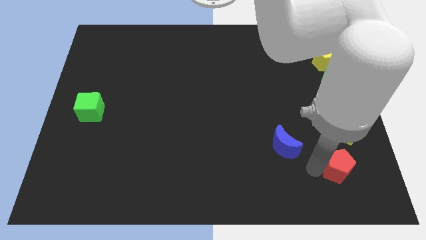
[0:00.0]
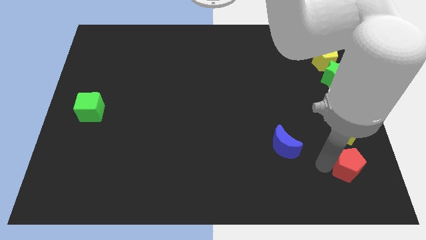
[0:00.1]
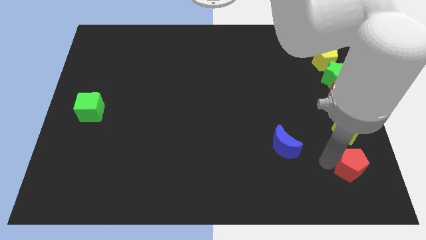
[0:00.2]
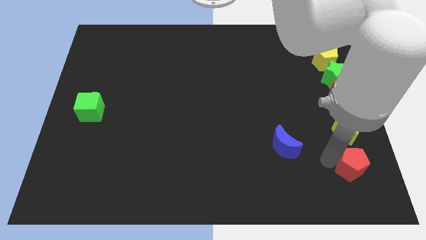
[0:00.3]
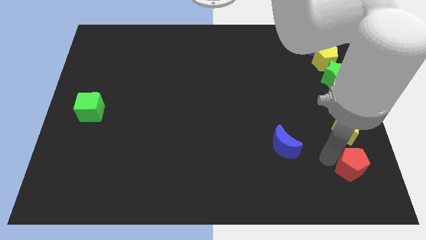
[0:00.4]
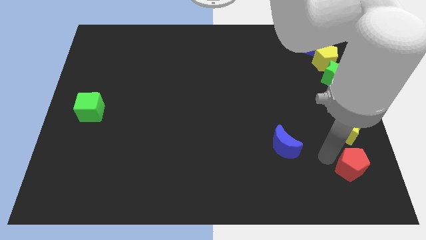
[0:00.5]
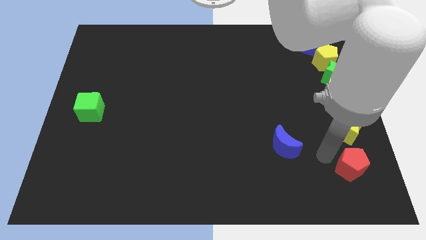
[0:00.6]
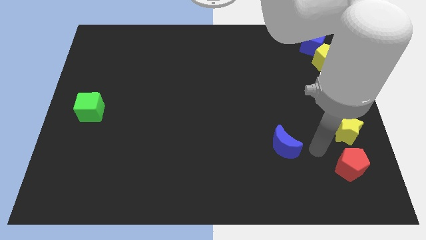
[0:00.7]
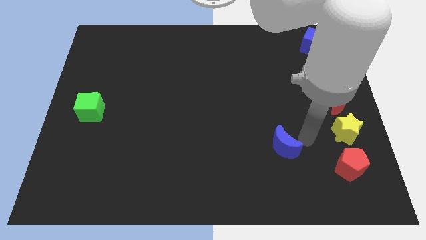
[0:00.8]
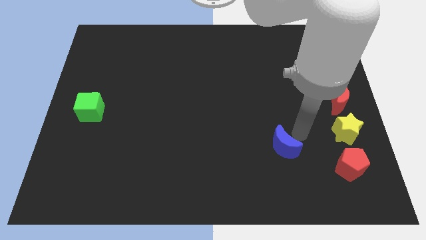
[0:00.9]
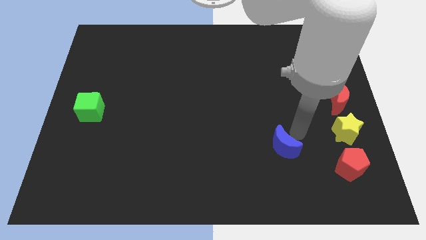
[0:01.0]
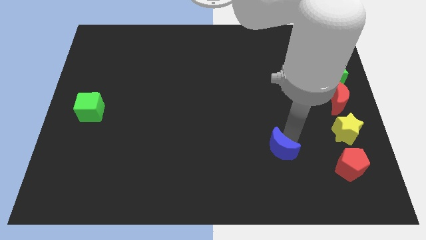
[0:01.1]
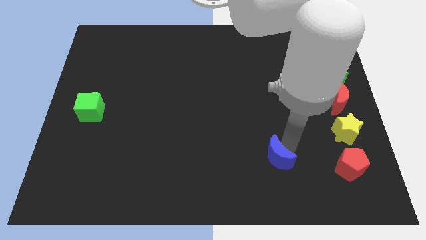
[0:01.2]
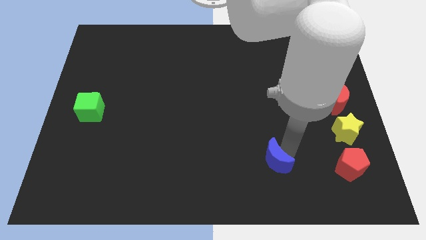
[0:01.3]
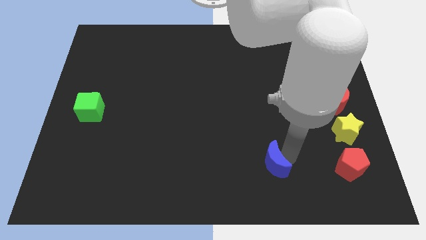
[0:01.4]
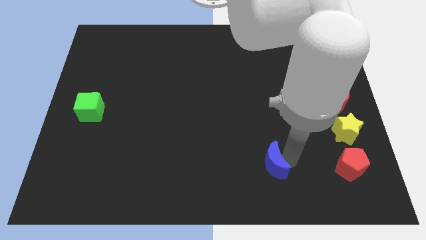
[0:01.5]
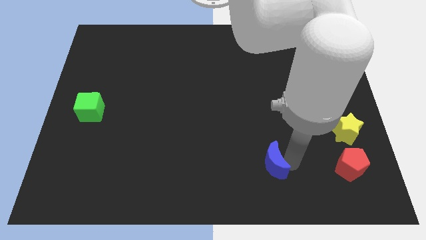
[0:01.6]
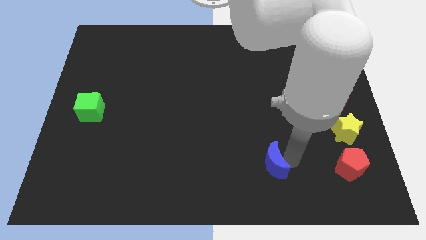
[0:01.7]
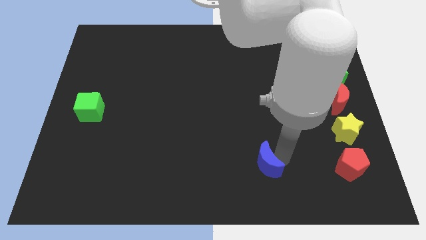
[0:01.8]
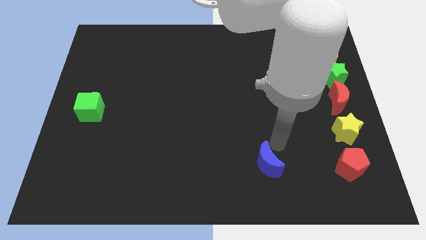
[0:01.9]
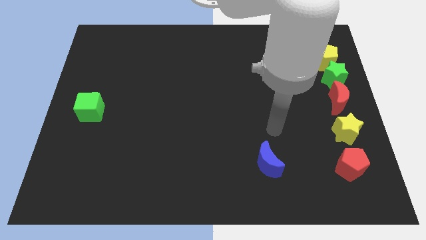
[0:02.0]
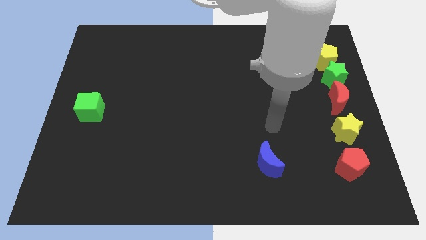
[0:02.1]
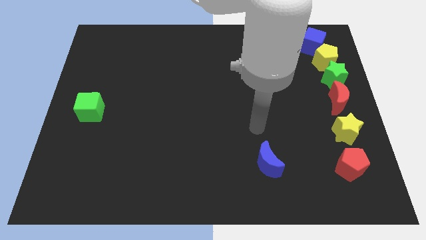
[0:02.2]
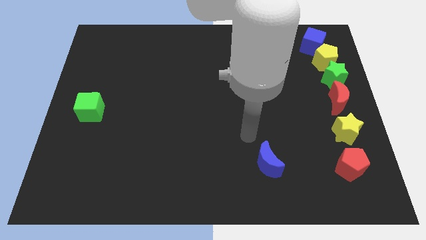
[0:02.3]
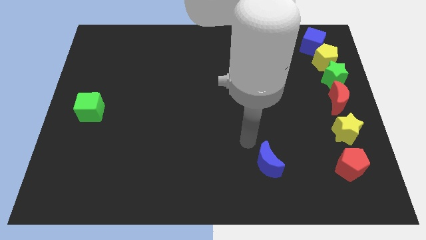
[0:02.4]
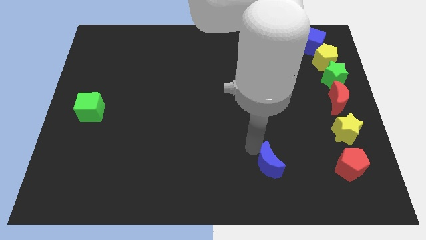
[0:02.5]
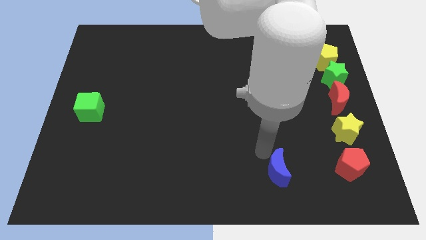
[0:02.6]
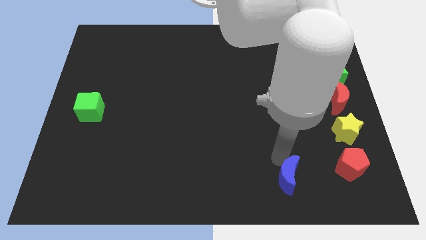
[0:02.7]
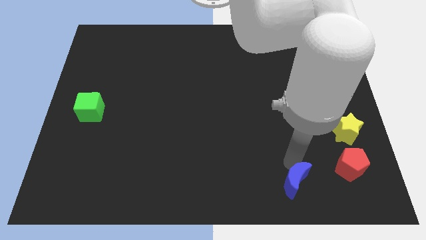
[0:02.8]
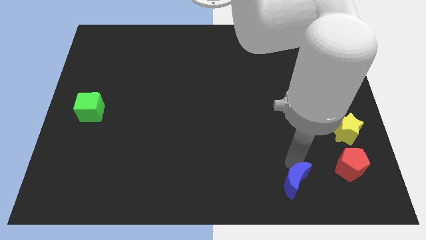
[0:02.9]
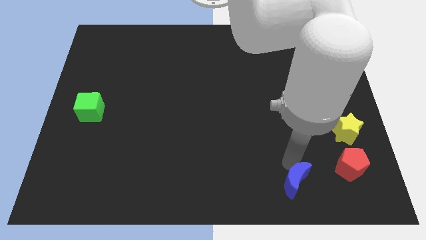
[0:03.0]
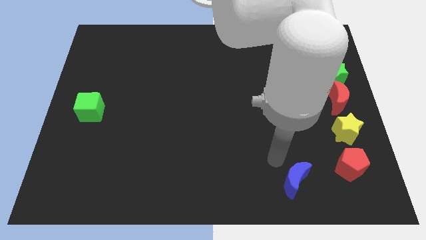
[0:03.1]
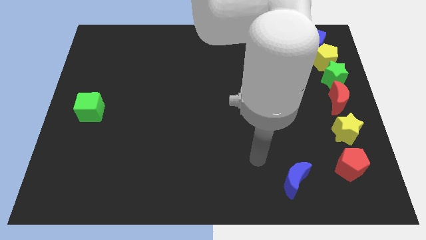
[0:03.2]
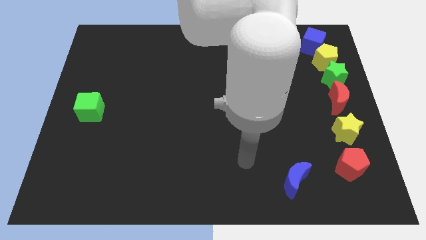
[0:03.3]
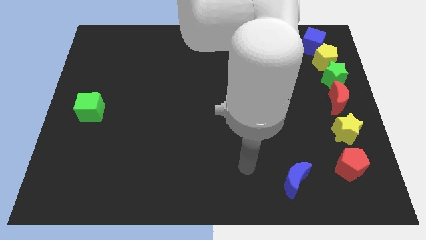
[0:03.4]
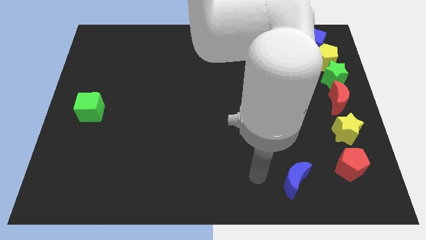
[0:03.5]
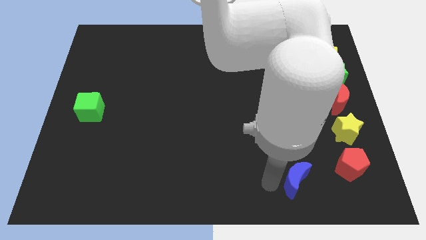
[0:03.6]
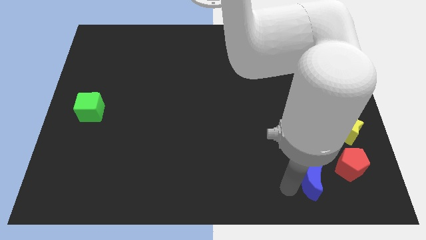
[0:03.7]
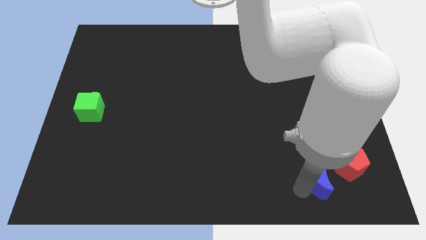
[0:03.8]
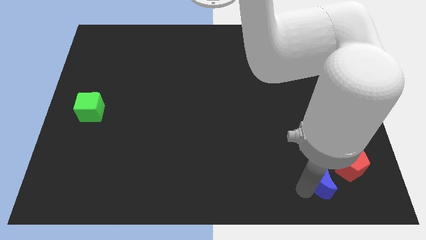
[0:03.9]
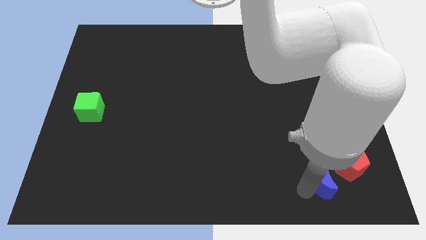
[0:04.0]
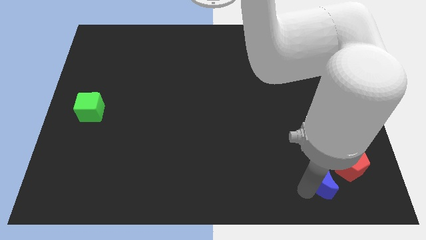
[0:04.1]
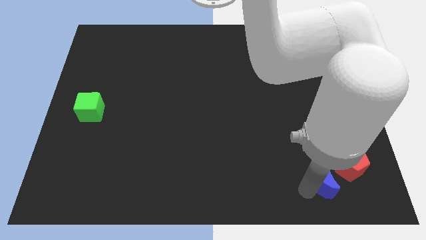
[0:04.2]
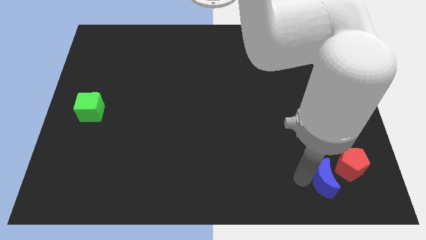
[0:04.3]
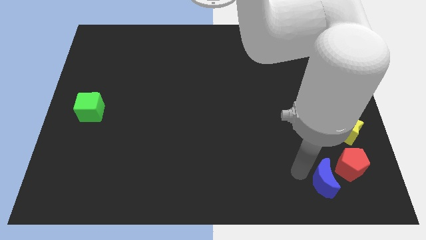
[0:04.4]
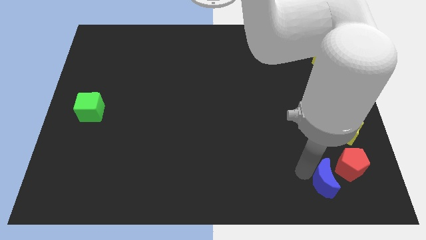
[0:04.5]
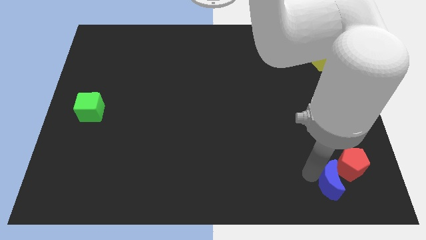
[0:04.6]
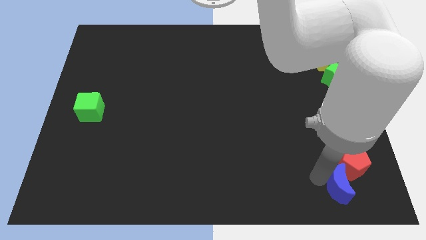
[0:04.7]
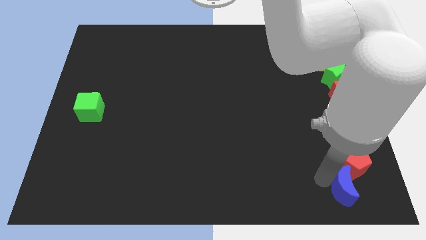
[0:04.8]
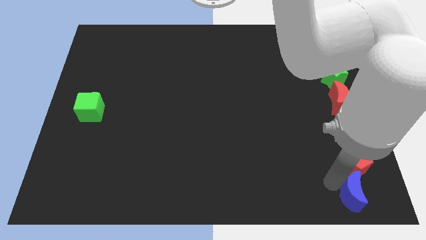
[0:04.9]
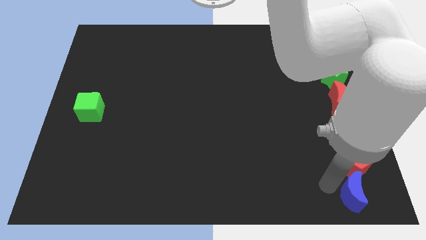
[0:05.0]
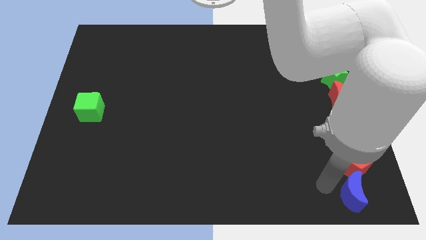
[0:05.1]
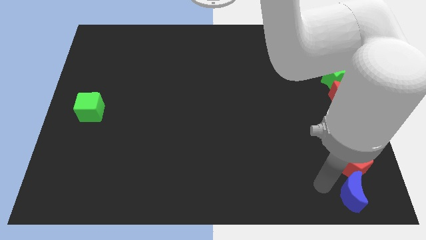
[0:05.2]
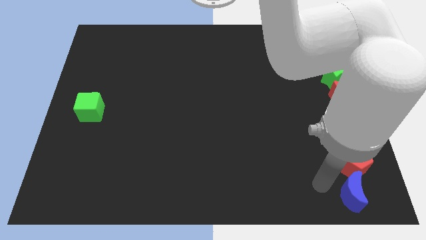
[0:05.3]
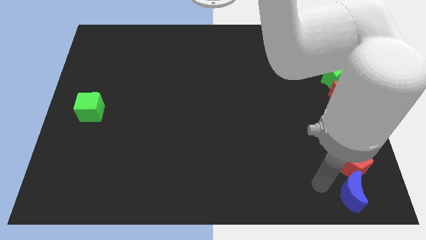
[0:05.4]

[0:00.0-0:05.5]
place red pentagon and blue moon in vertical line of blocks

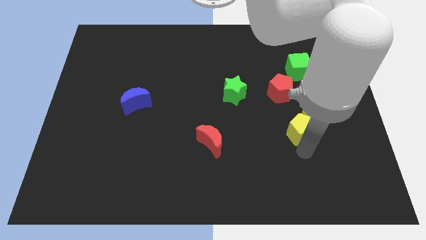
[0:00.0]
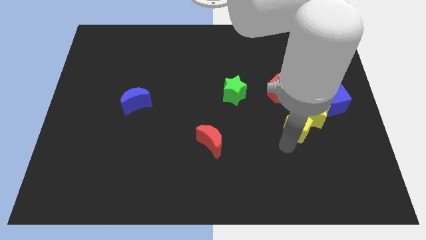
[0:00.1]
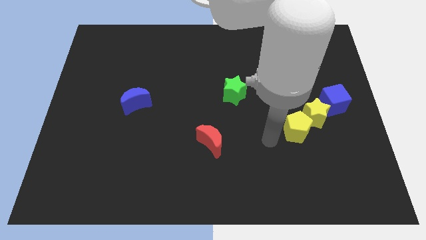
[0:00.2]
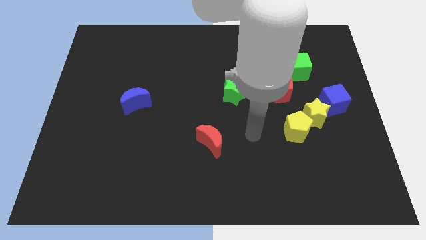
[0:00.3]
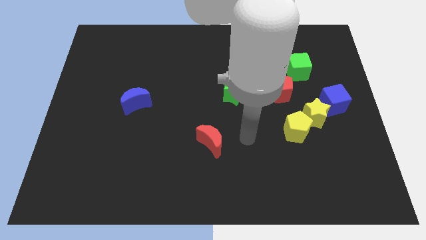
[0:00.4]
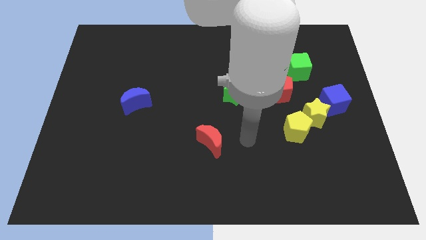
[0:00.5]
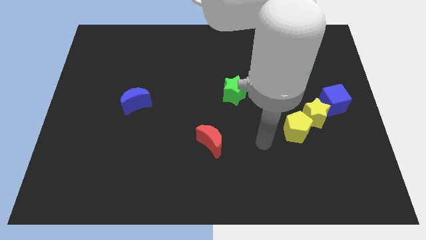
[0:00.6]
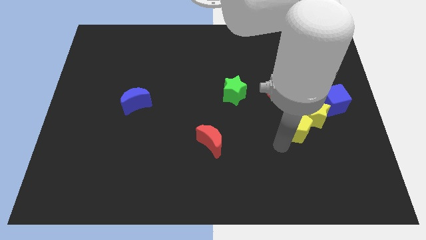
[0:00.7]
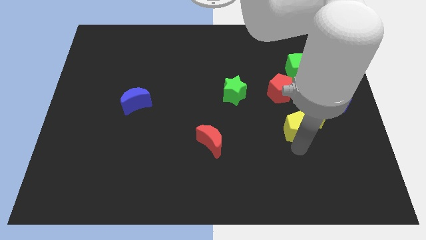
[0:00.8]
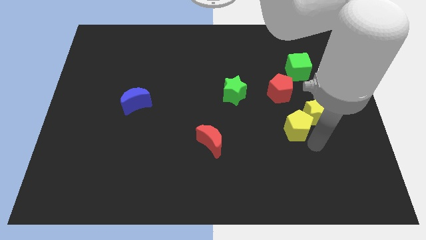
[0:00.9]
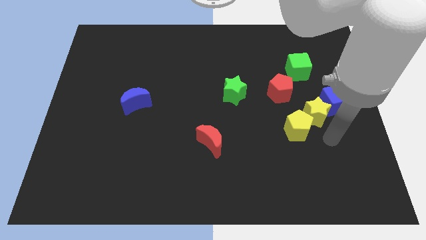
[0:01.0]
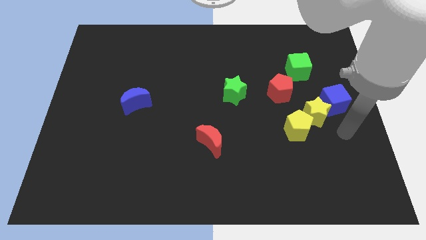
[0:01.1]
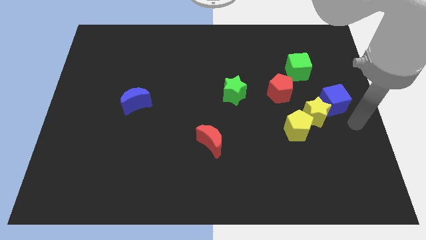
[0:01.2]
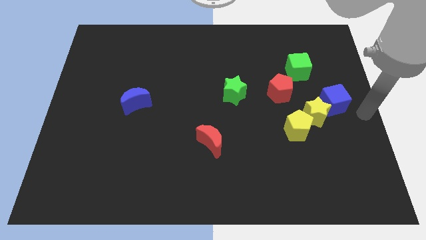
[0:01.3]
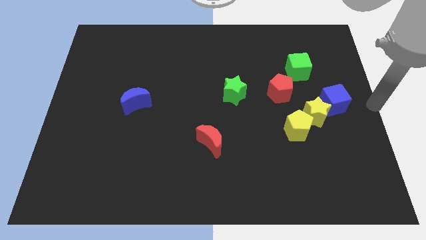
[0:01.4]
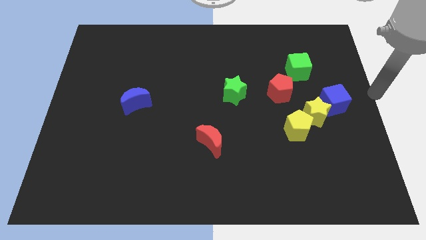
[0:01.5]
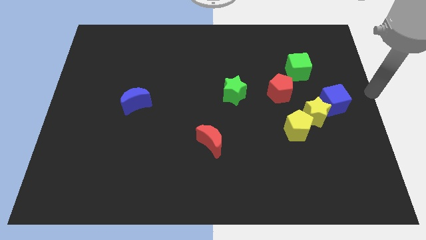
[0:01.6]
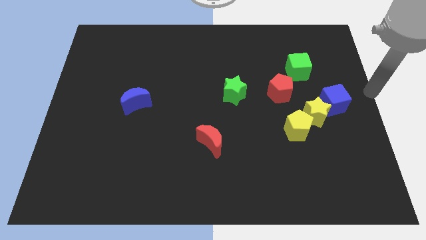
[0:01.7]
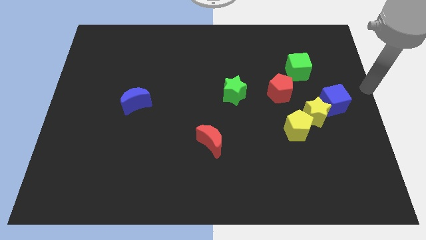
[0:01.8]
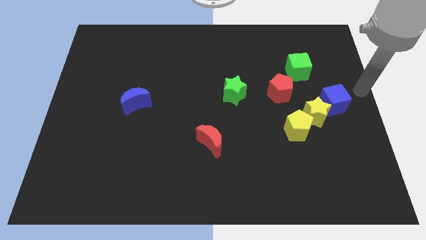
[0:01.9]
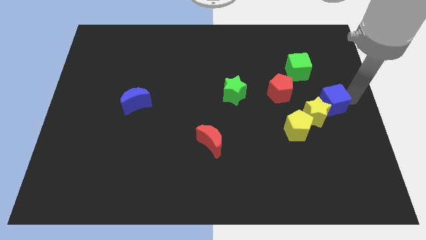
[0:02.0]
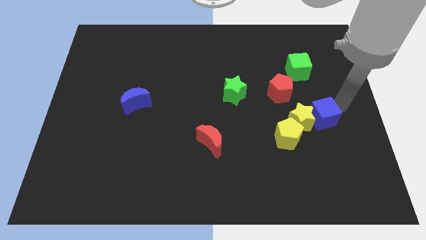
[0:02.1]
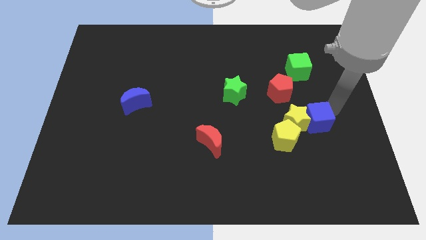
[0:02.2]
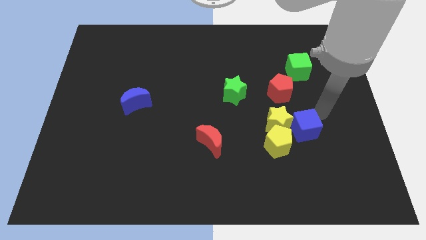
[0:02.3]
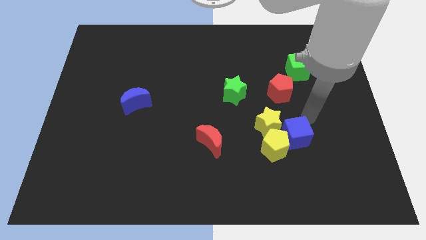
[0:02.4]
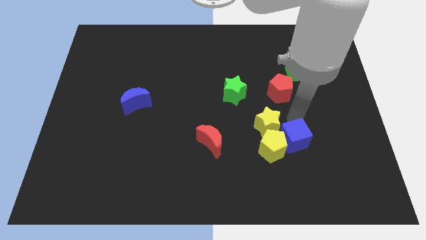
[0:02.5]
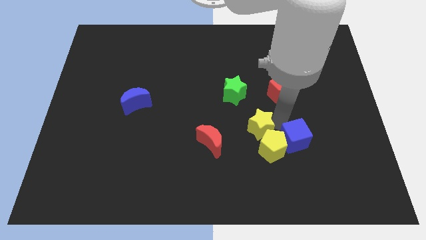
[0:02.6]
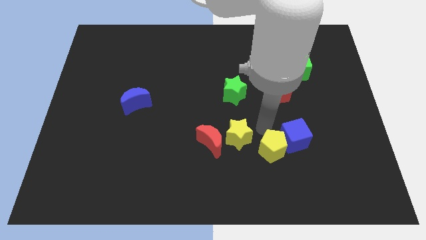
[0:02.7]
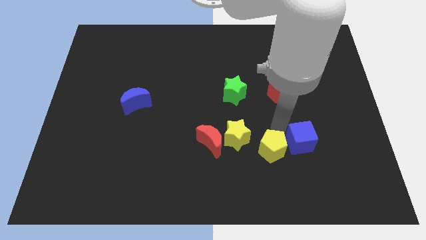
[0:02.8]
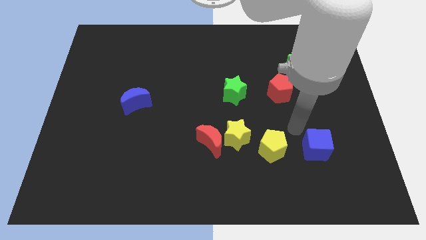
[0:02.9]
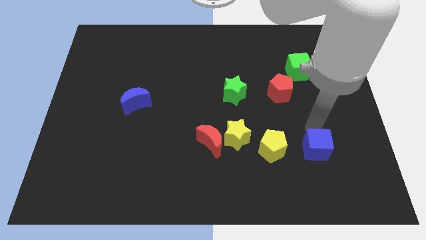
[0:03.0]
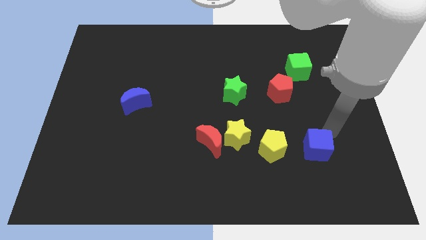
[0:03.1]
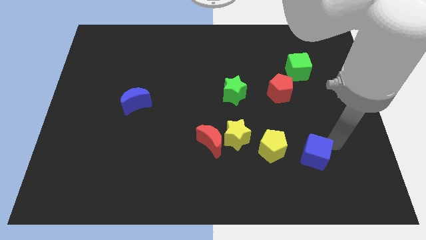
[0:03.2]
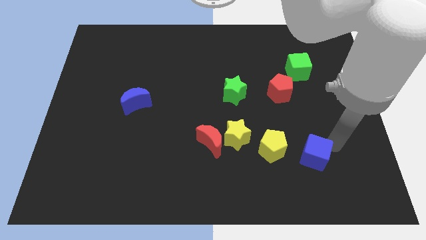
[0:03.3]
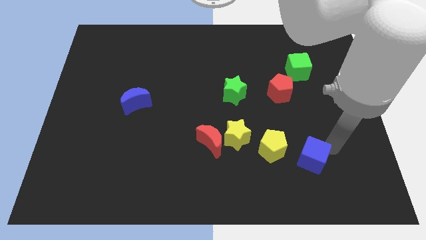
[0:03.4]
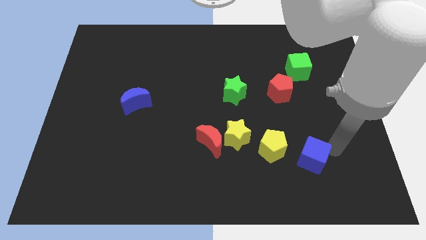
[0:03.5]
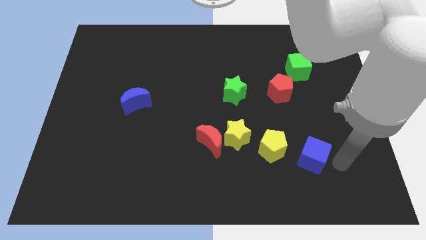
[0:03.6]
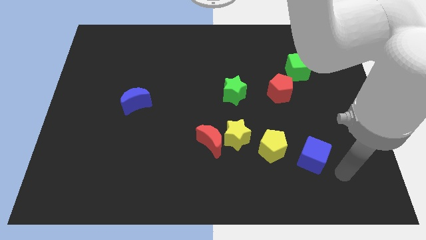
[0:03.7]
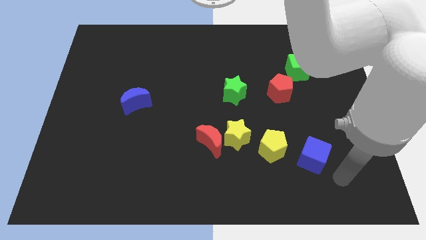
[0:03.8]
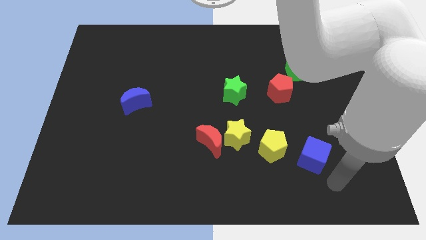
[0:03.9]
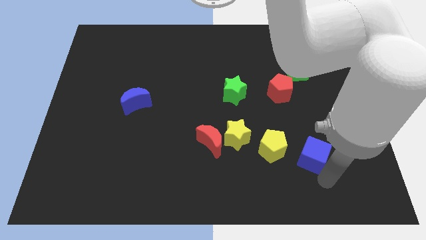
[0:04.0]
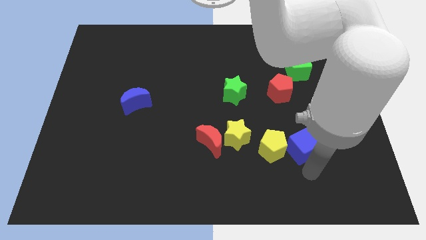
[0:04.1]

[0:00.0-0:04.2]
separate the yellow blocks
